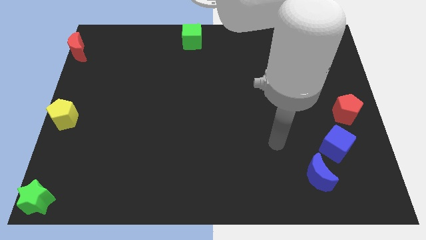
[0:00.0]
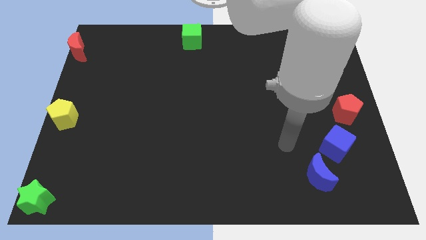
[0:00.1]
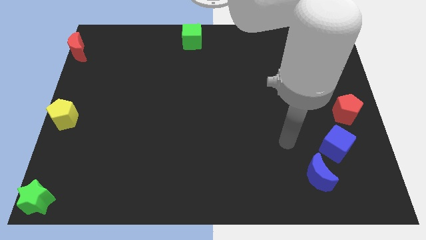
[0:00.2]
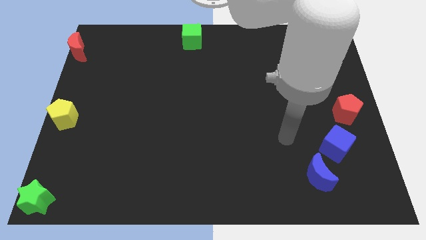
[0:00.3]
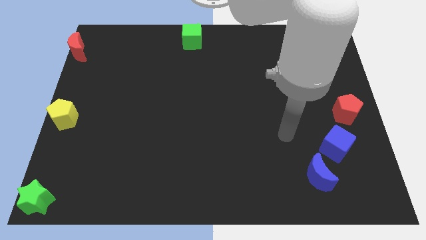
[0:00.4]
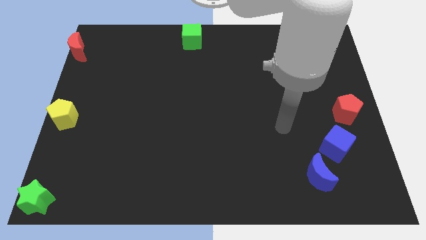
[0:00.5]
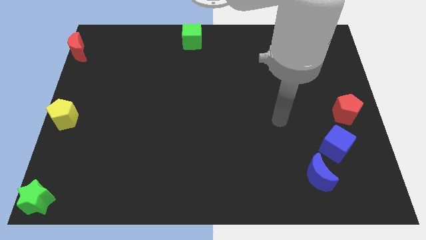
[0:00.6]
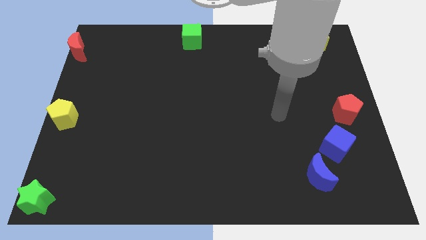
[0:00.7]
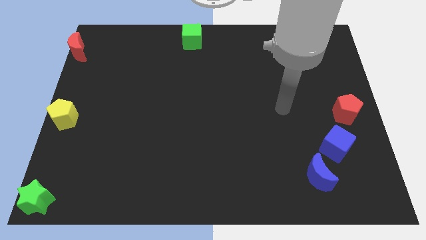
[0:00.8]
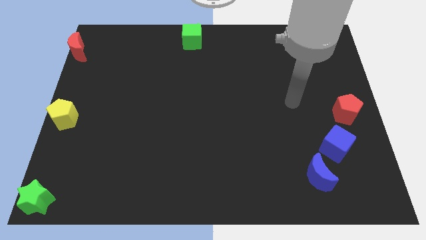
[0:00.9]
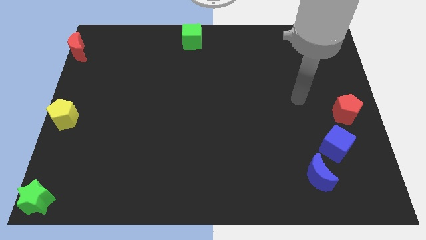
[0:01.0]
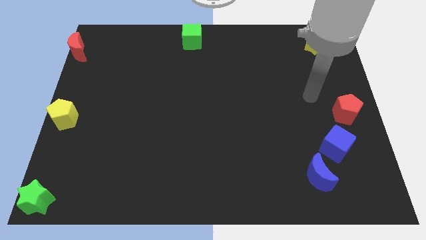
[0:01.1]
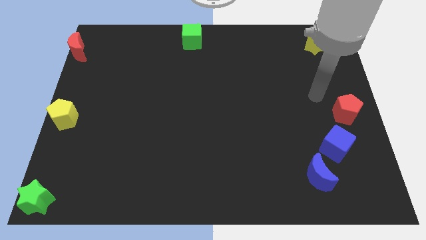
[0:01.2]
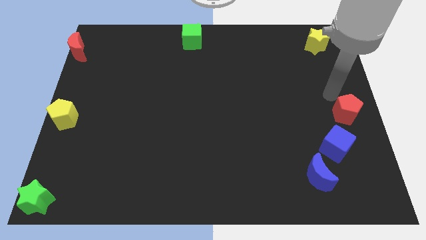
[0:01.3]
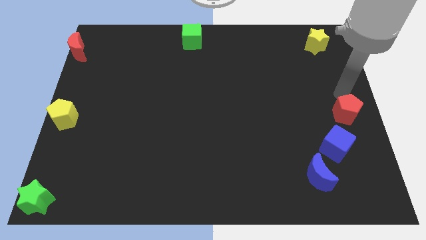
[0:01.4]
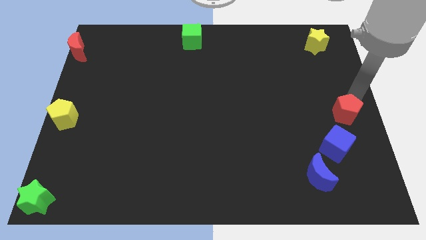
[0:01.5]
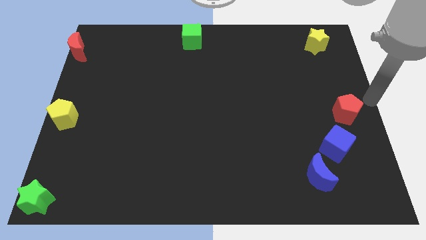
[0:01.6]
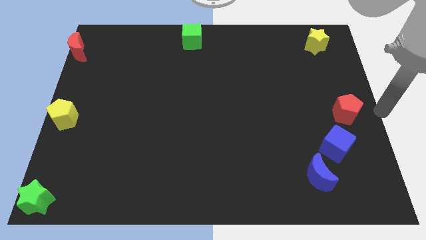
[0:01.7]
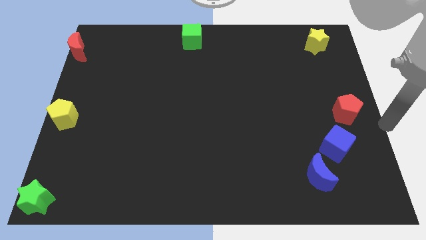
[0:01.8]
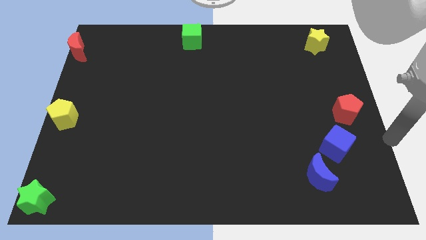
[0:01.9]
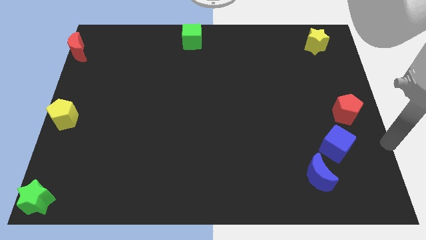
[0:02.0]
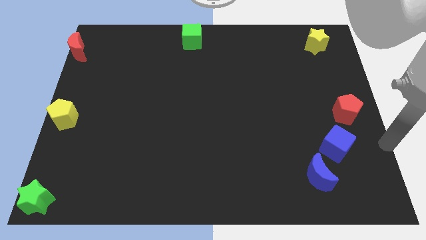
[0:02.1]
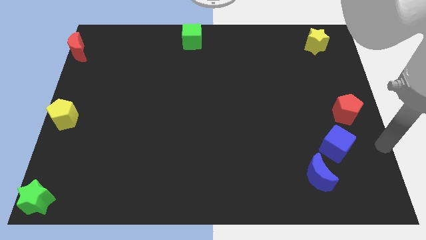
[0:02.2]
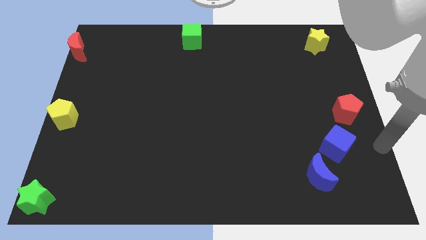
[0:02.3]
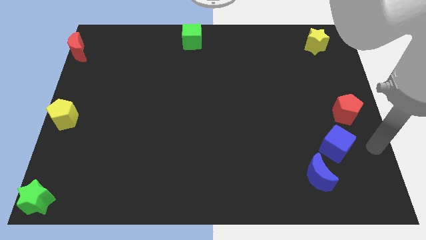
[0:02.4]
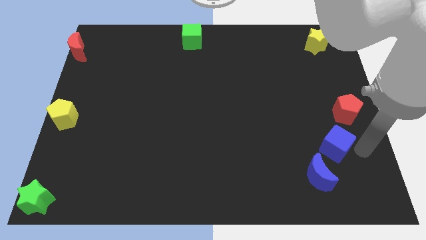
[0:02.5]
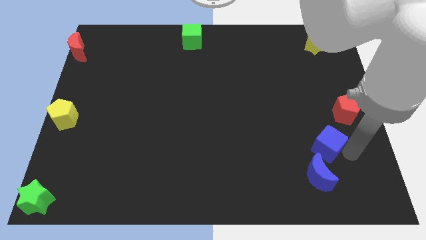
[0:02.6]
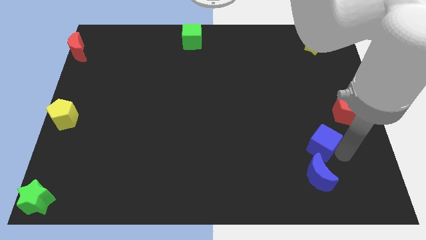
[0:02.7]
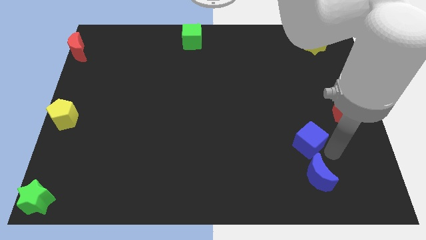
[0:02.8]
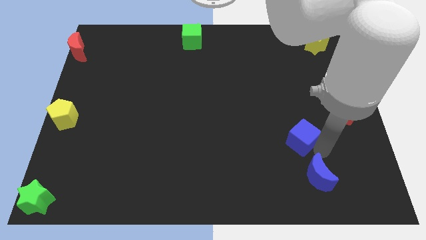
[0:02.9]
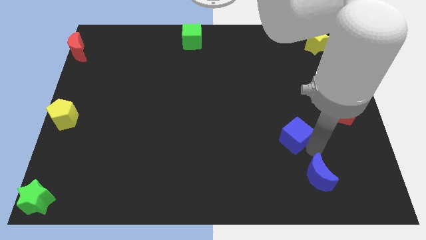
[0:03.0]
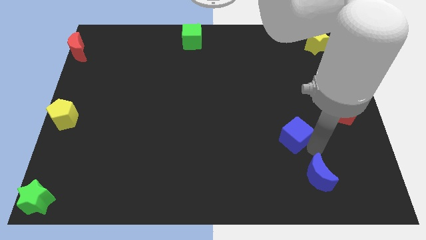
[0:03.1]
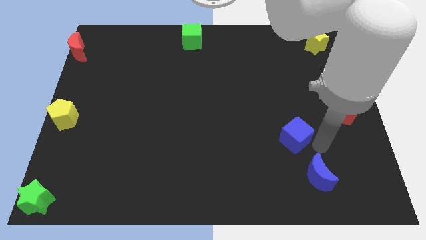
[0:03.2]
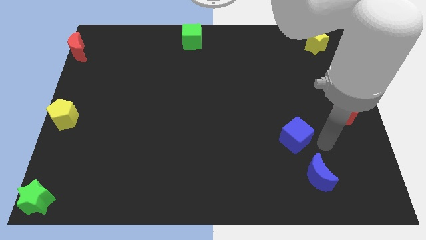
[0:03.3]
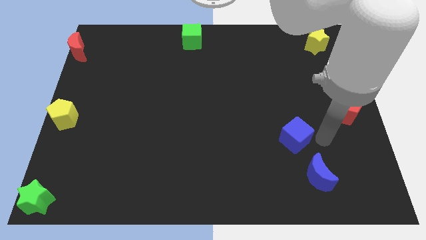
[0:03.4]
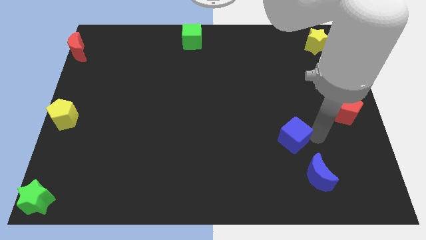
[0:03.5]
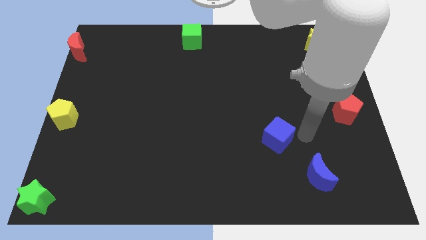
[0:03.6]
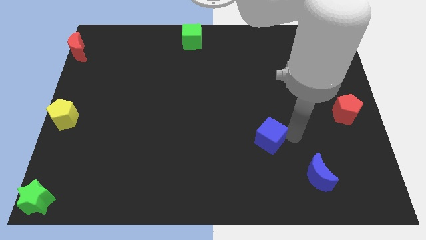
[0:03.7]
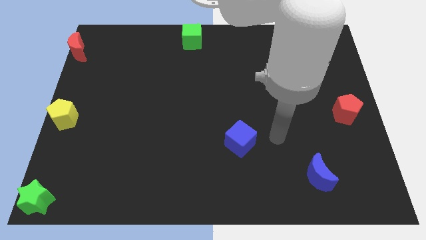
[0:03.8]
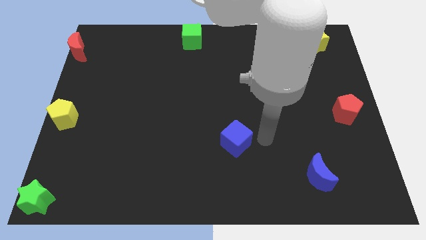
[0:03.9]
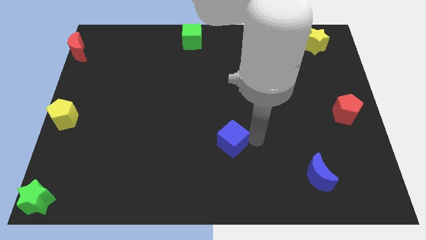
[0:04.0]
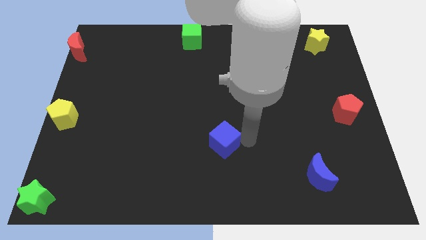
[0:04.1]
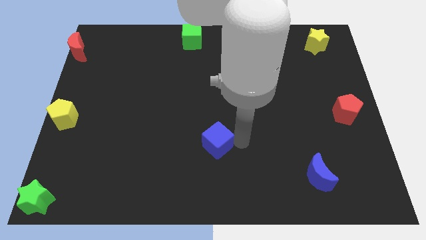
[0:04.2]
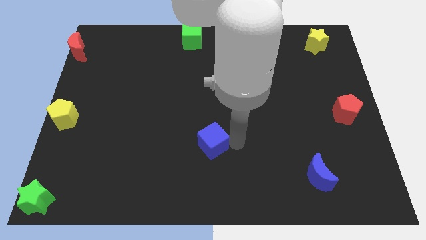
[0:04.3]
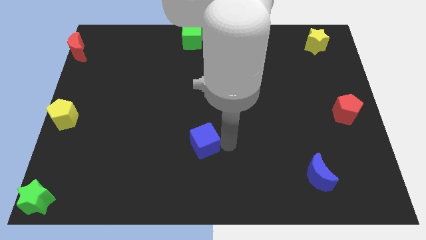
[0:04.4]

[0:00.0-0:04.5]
move the blue cube towards the left of the board

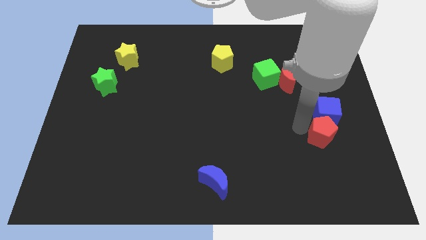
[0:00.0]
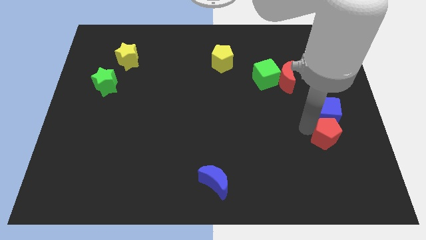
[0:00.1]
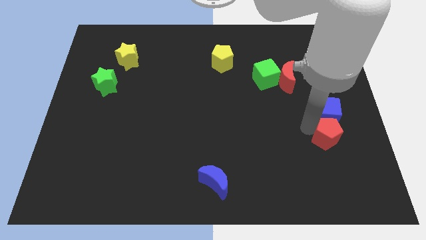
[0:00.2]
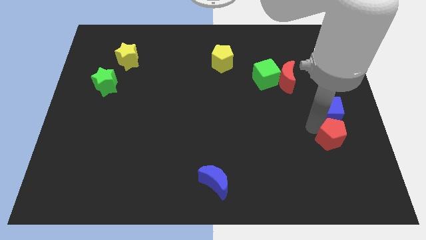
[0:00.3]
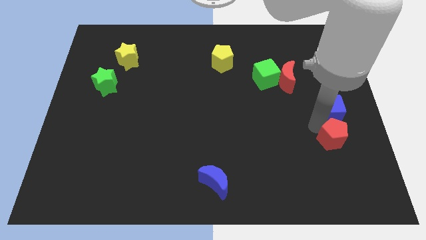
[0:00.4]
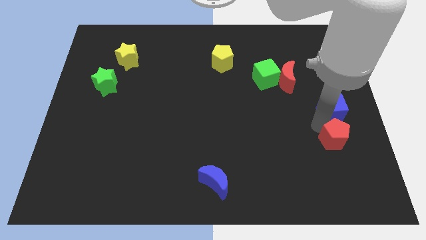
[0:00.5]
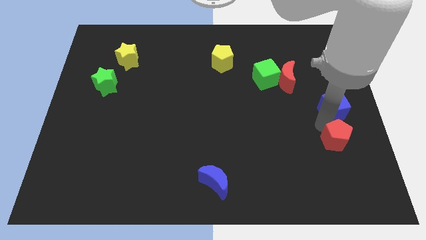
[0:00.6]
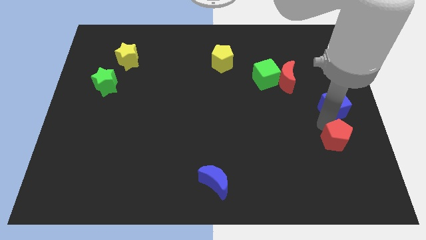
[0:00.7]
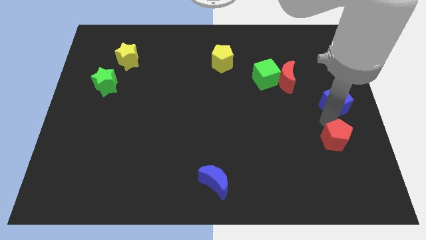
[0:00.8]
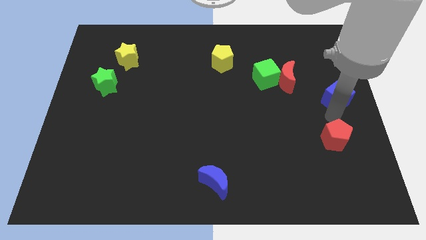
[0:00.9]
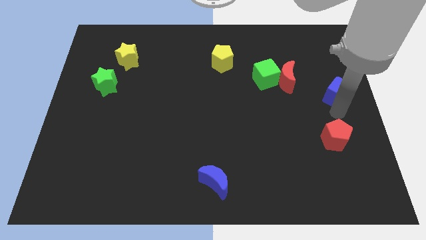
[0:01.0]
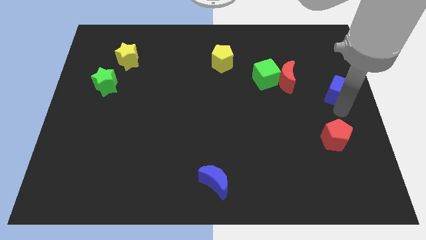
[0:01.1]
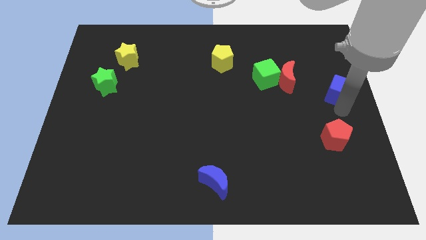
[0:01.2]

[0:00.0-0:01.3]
separate the red pentagon and the blue cube

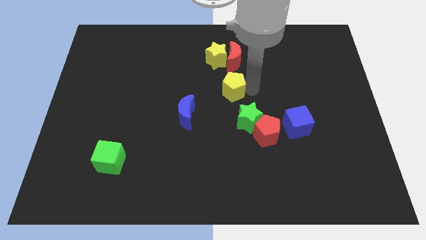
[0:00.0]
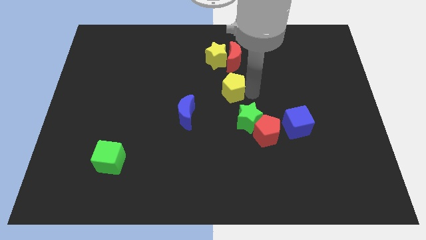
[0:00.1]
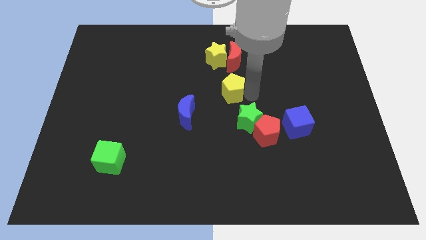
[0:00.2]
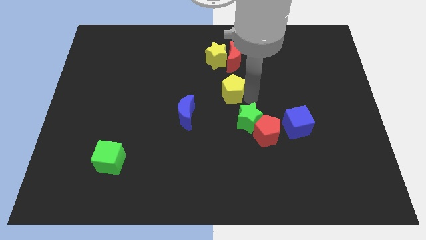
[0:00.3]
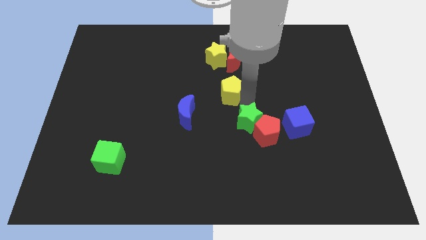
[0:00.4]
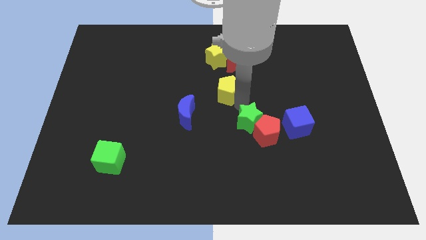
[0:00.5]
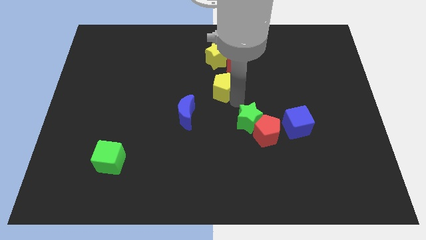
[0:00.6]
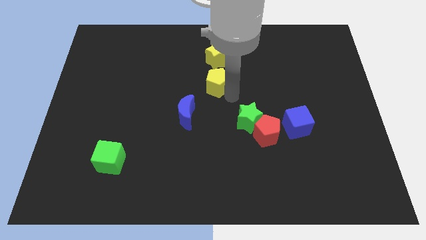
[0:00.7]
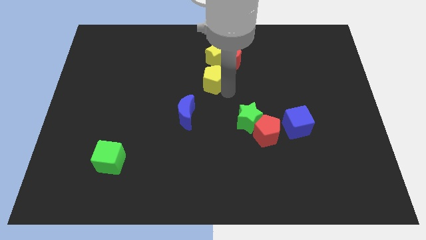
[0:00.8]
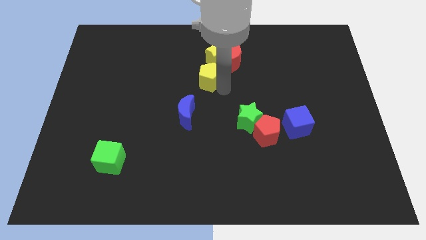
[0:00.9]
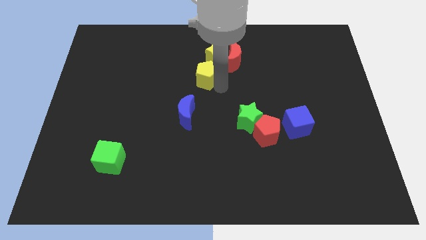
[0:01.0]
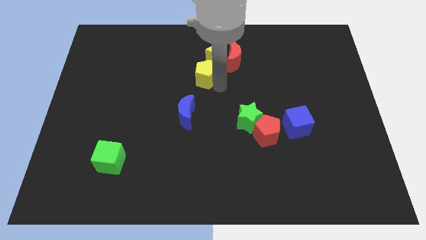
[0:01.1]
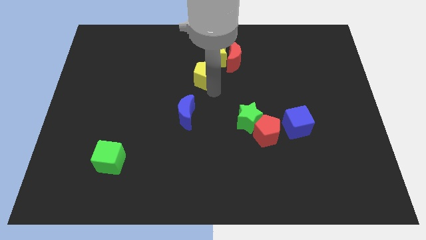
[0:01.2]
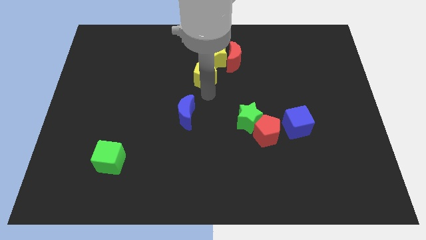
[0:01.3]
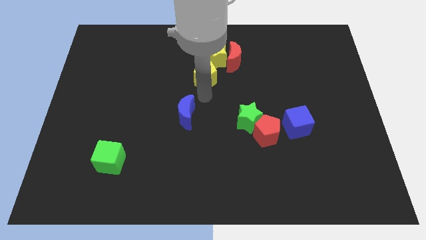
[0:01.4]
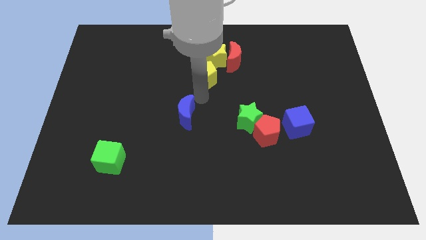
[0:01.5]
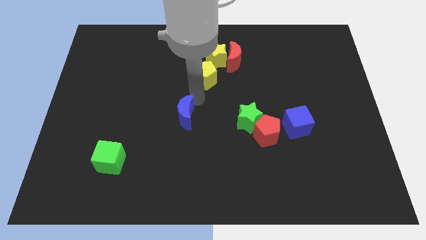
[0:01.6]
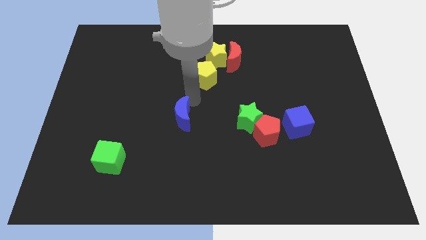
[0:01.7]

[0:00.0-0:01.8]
move yellow pentagon close to the yellow star

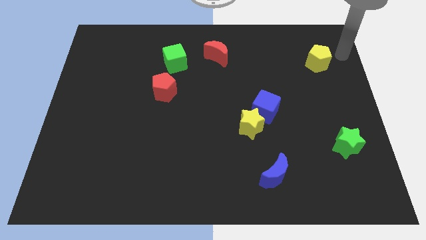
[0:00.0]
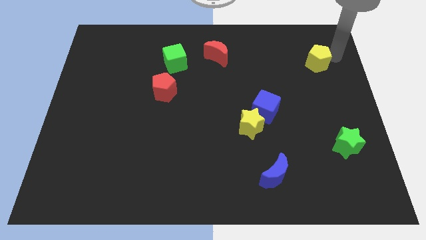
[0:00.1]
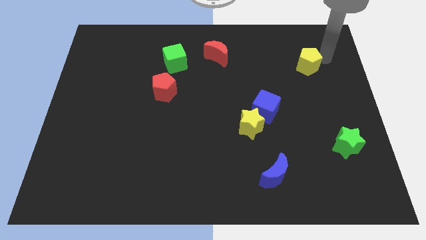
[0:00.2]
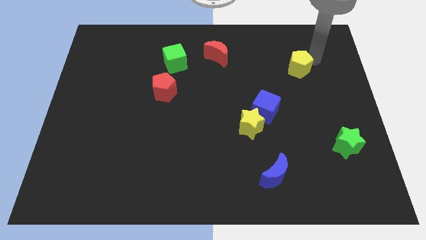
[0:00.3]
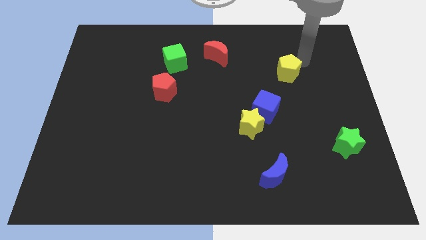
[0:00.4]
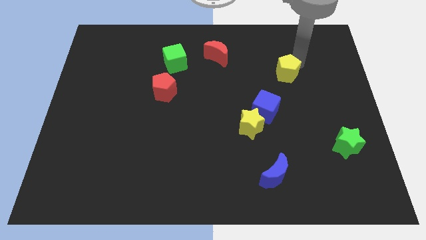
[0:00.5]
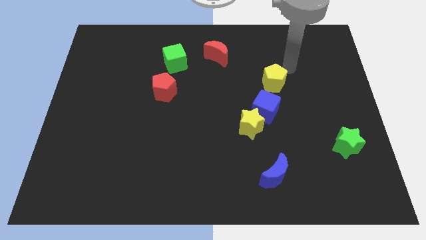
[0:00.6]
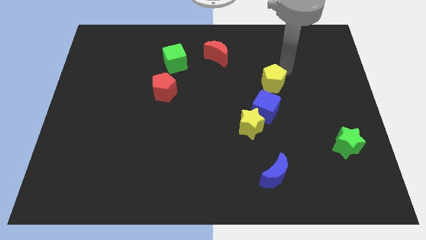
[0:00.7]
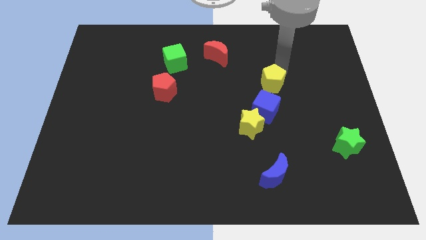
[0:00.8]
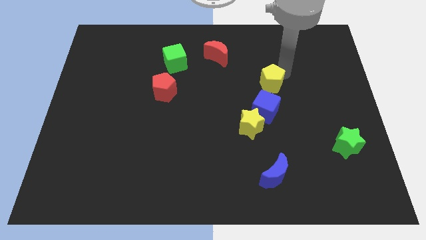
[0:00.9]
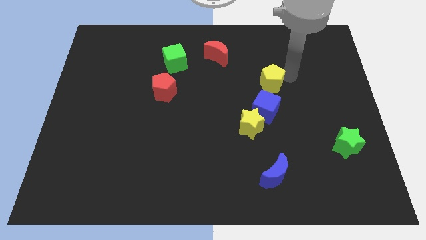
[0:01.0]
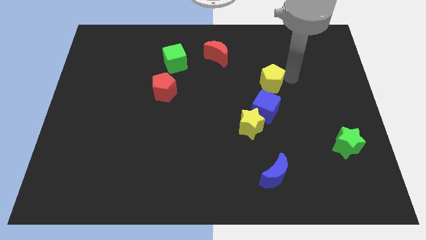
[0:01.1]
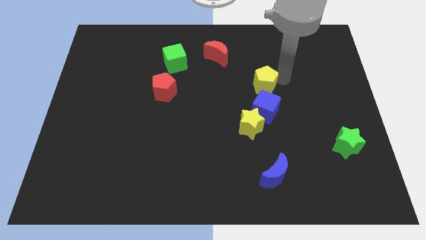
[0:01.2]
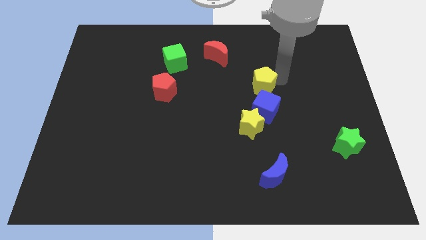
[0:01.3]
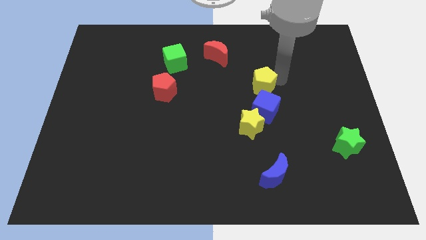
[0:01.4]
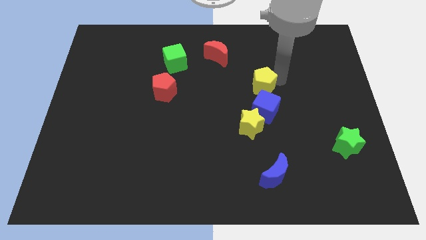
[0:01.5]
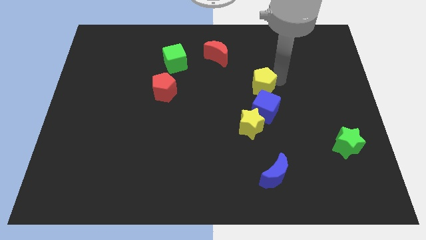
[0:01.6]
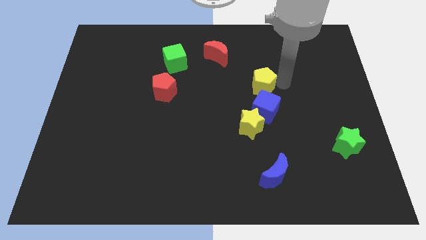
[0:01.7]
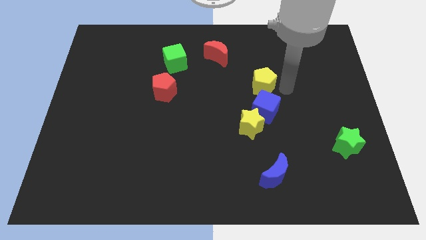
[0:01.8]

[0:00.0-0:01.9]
drag the yellow pentagon close to blue cube
